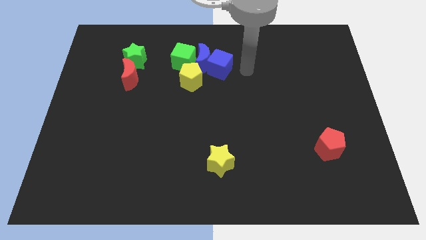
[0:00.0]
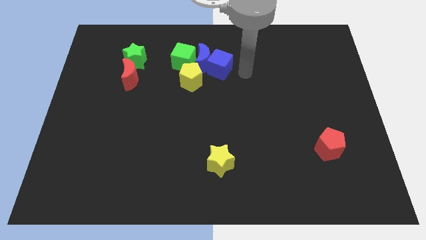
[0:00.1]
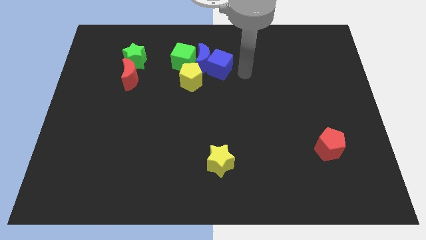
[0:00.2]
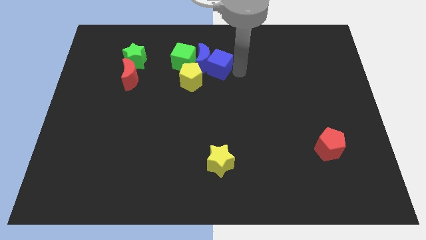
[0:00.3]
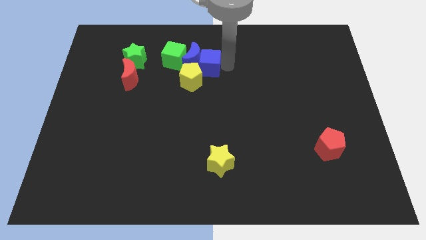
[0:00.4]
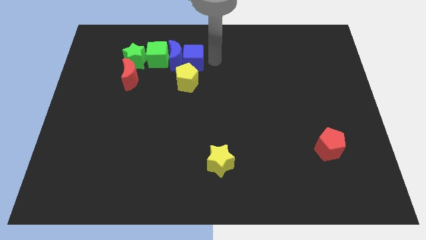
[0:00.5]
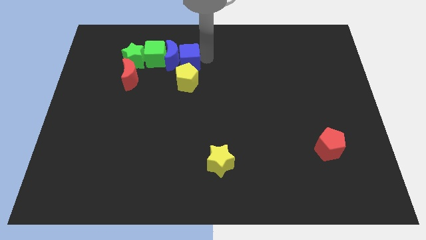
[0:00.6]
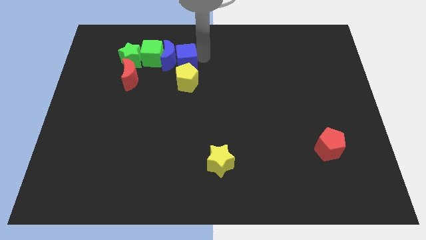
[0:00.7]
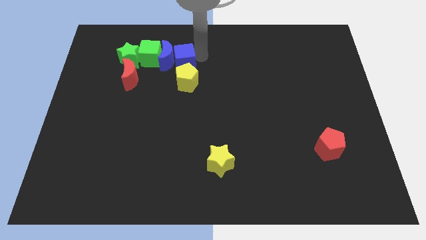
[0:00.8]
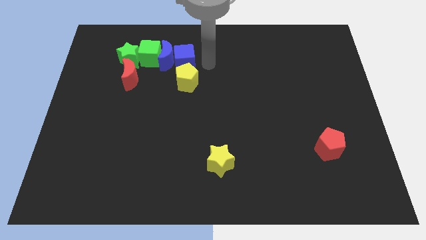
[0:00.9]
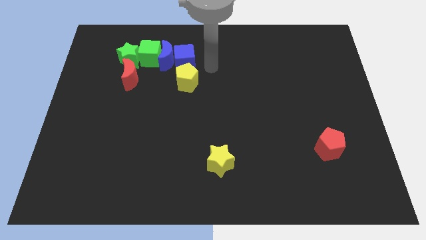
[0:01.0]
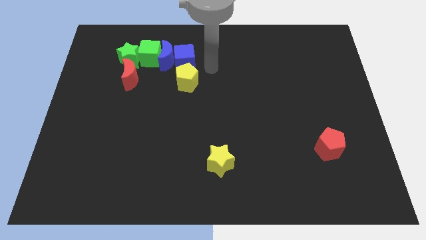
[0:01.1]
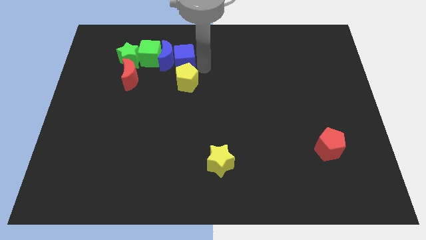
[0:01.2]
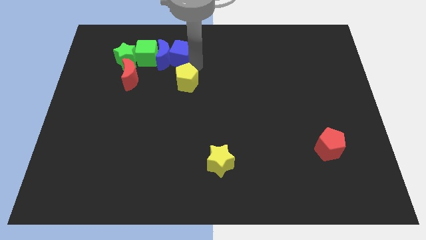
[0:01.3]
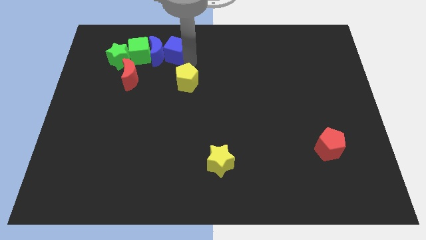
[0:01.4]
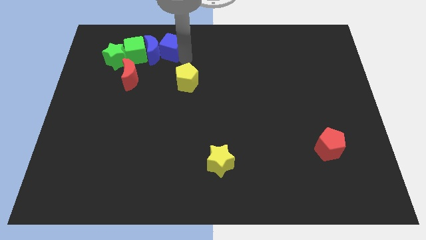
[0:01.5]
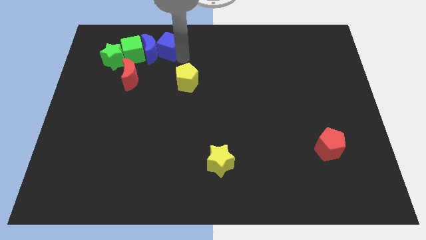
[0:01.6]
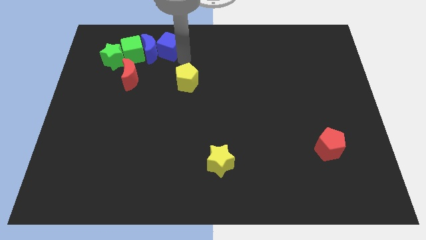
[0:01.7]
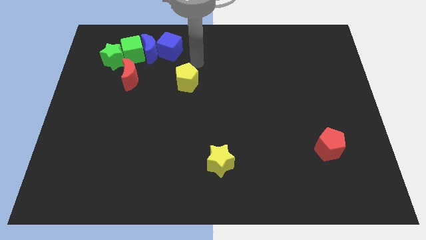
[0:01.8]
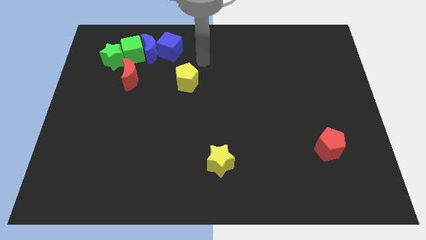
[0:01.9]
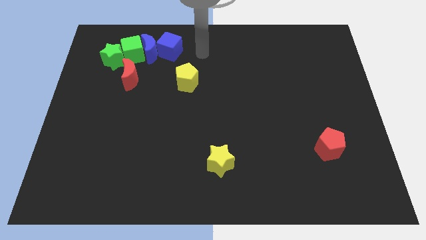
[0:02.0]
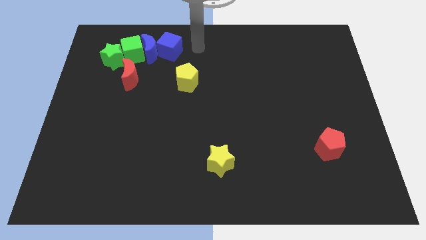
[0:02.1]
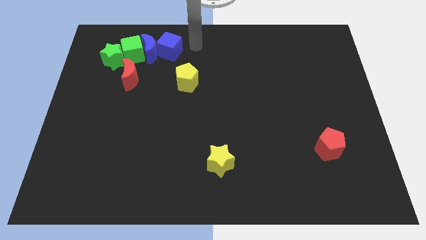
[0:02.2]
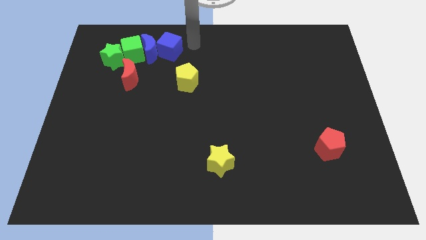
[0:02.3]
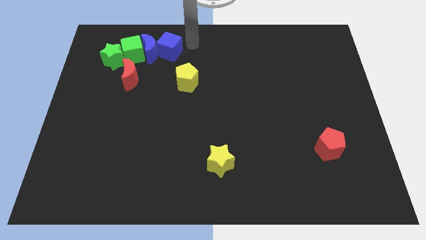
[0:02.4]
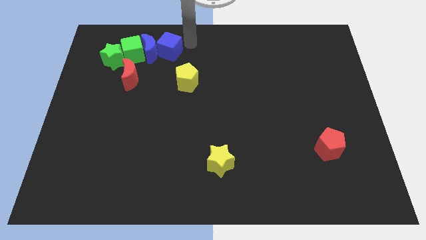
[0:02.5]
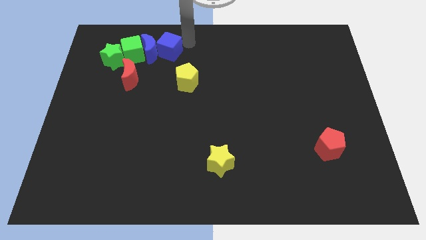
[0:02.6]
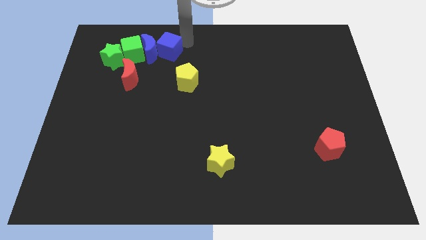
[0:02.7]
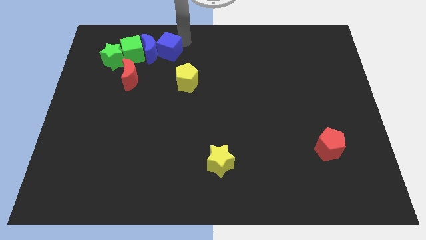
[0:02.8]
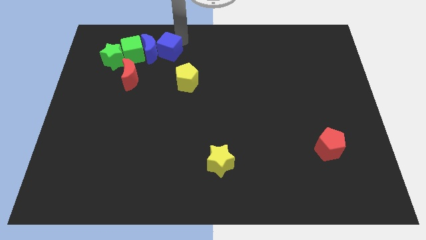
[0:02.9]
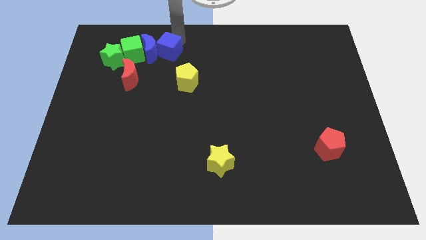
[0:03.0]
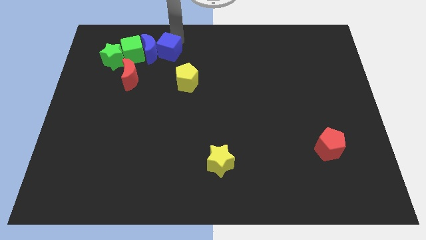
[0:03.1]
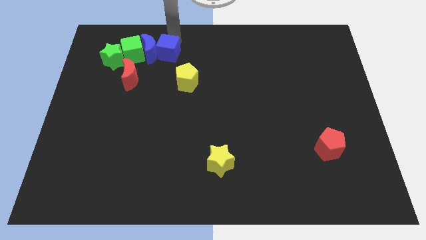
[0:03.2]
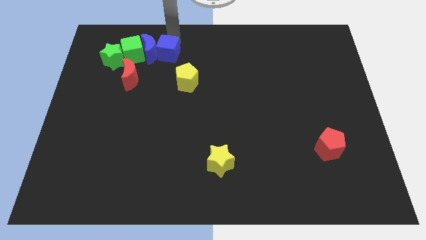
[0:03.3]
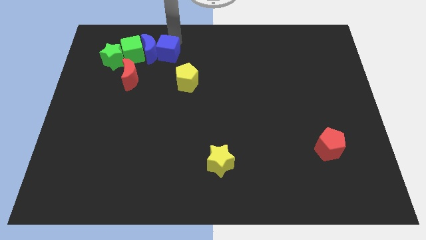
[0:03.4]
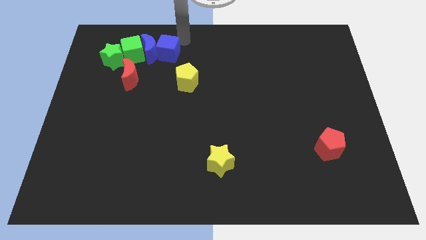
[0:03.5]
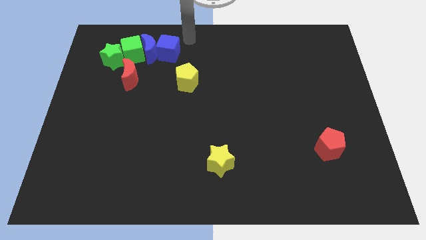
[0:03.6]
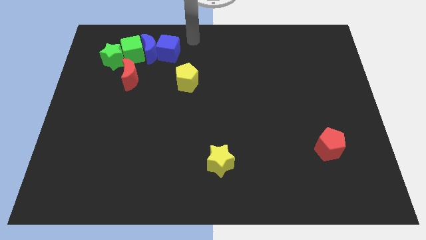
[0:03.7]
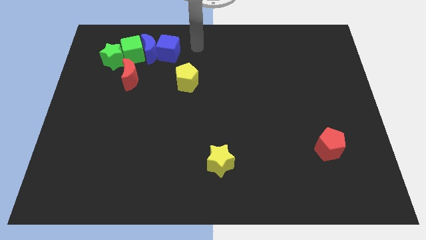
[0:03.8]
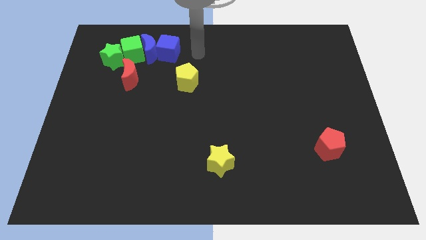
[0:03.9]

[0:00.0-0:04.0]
push the blue and green blocks to the left side

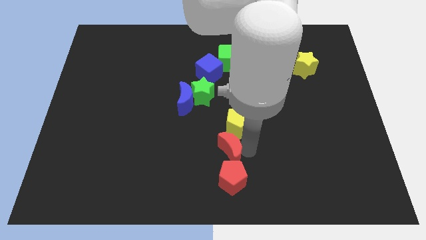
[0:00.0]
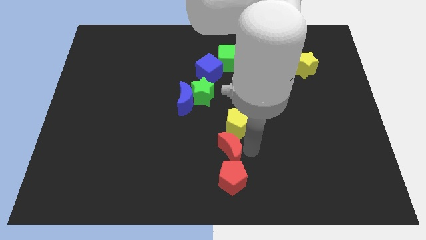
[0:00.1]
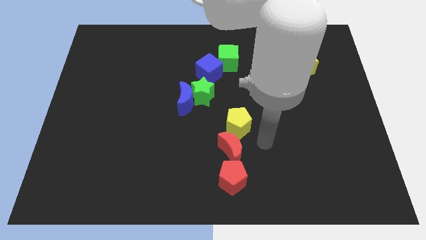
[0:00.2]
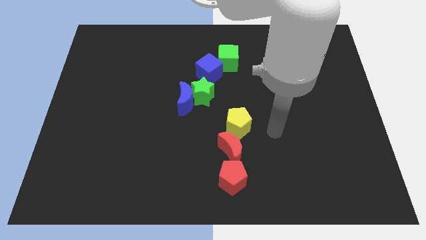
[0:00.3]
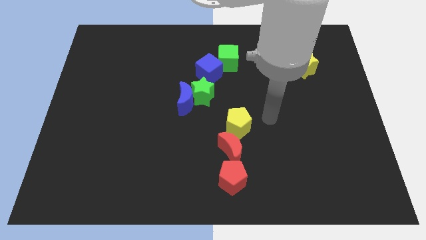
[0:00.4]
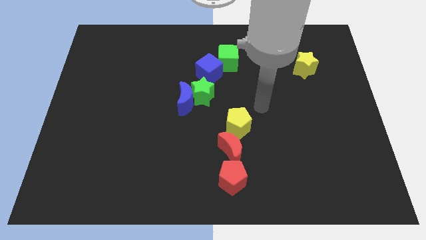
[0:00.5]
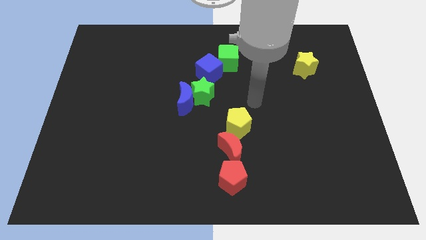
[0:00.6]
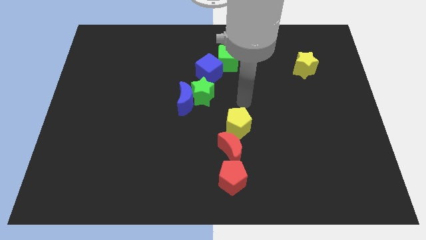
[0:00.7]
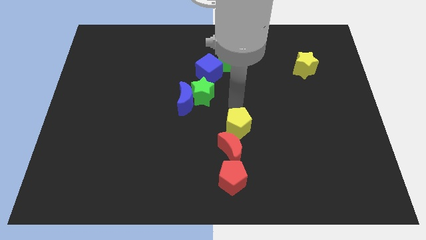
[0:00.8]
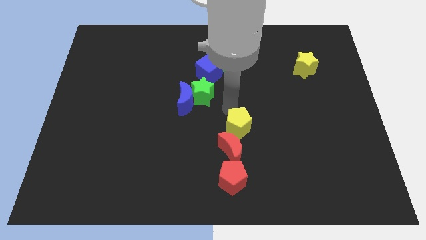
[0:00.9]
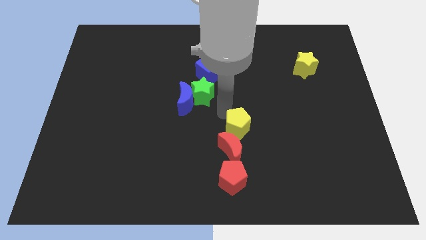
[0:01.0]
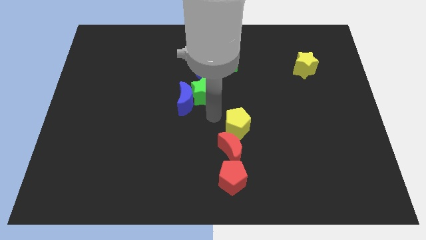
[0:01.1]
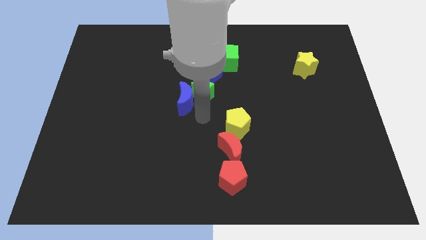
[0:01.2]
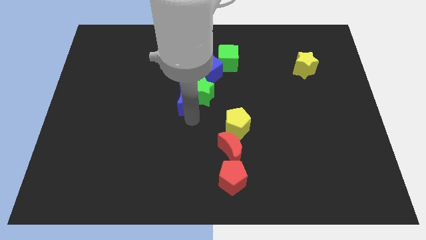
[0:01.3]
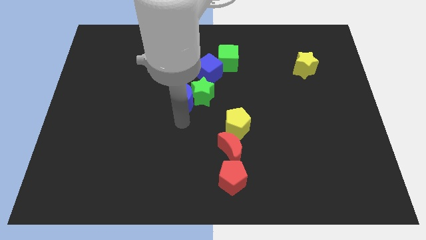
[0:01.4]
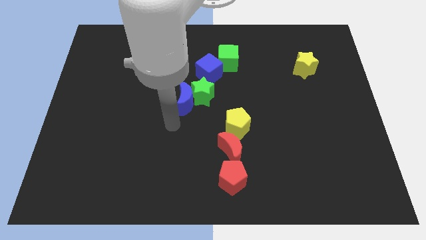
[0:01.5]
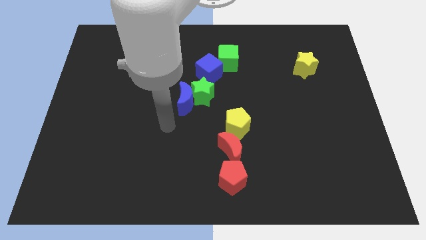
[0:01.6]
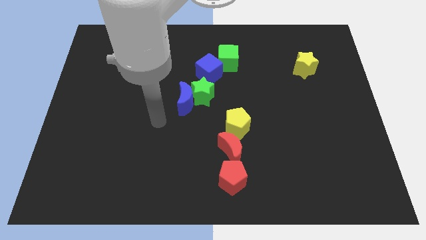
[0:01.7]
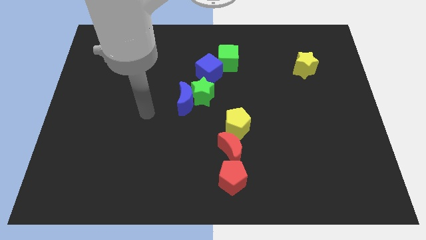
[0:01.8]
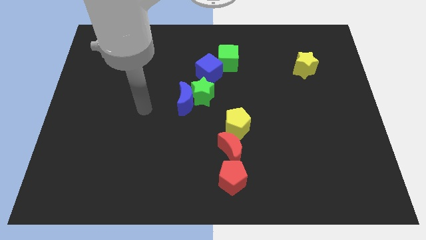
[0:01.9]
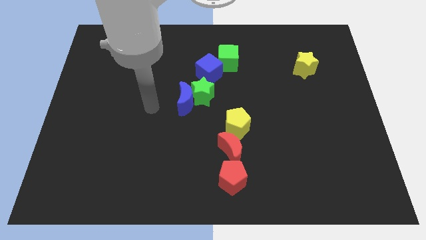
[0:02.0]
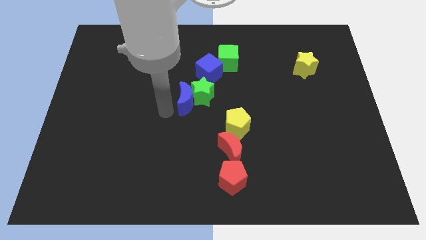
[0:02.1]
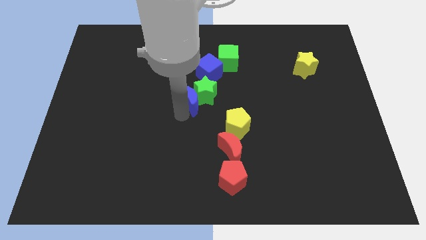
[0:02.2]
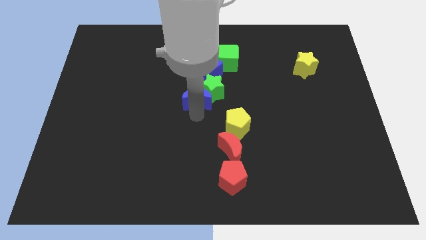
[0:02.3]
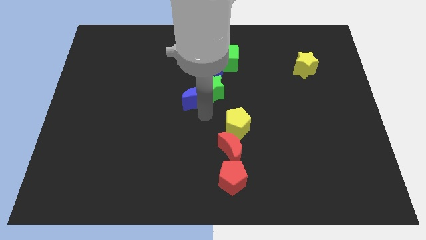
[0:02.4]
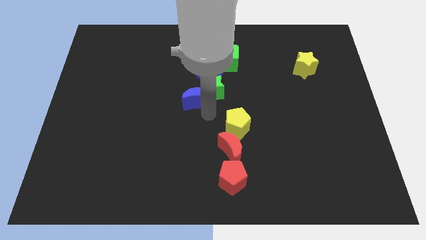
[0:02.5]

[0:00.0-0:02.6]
move the blue crescent slightly to the right

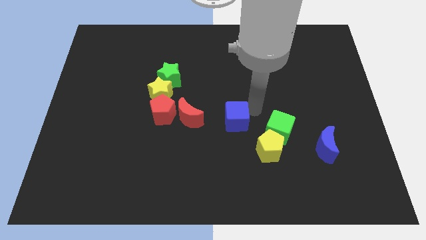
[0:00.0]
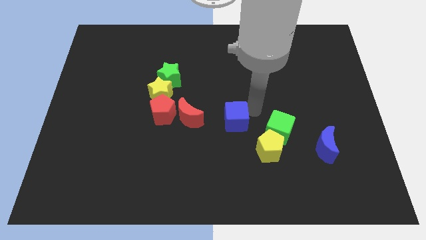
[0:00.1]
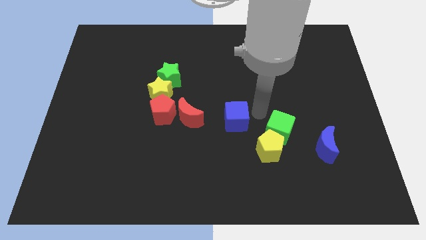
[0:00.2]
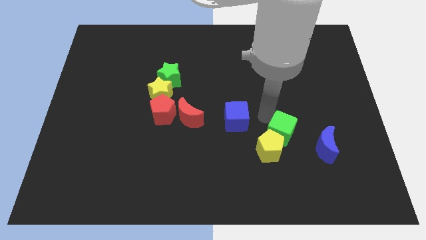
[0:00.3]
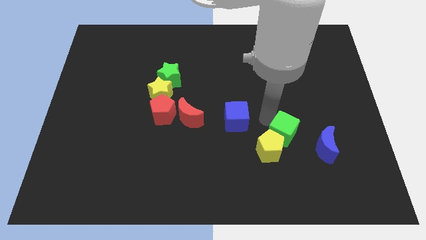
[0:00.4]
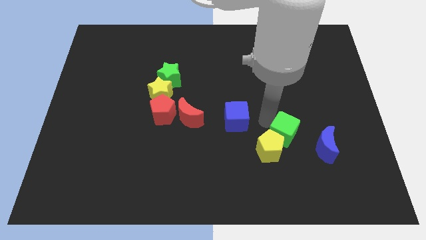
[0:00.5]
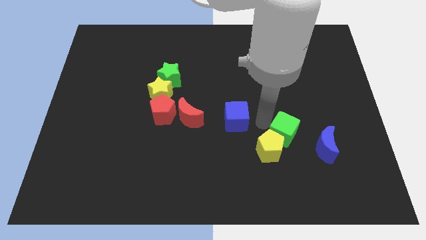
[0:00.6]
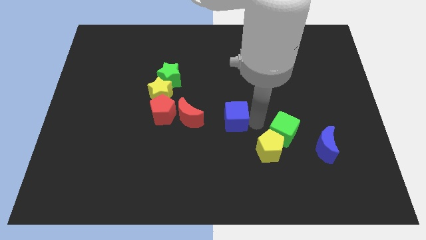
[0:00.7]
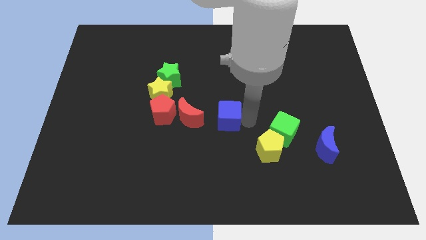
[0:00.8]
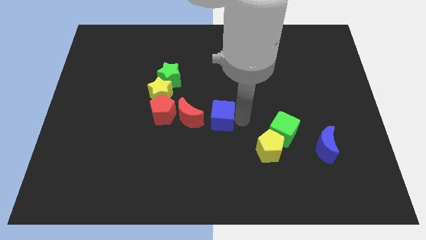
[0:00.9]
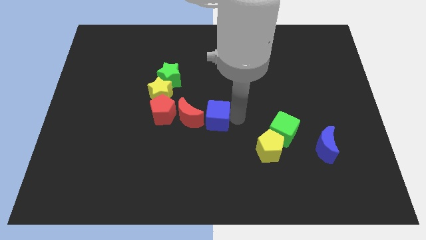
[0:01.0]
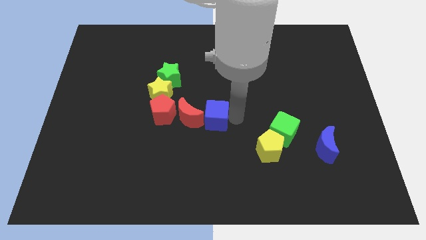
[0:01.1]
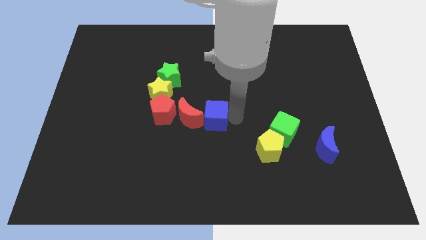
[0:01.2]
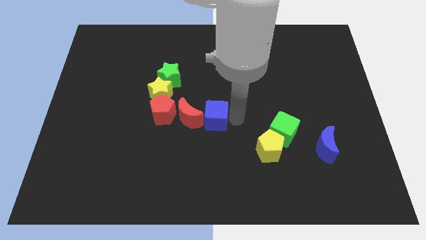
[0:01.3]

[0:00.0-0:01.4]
drag the blue cube into red crescent

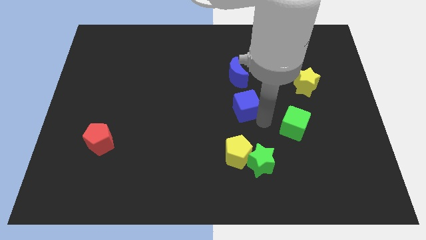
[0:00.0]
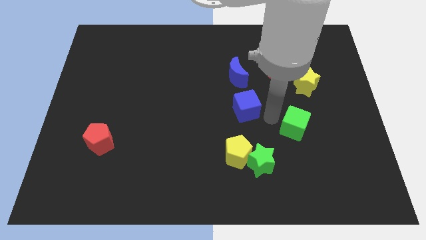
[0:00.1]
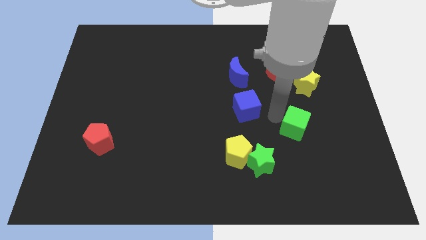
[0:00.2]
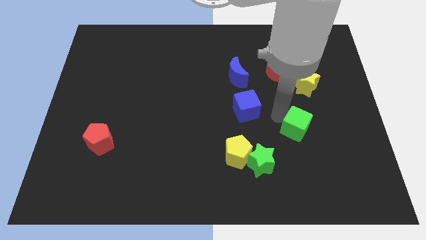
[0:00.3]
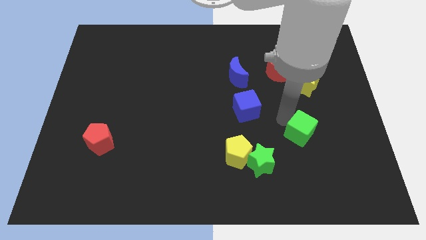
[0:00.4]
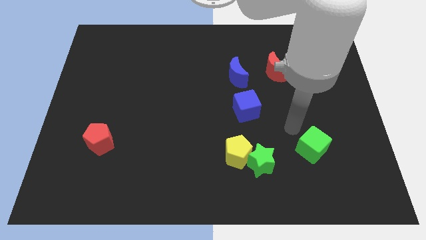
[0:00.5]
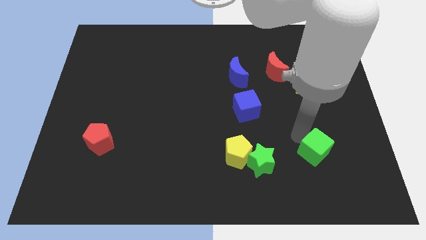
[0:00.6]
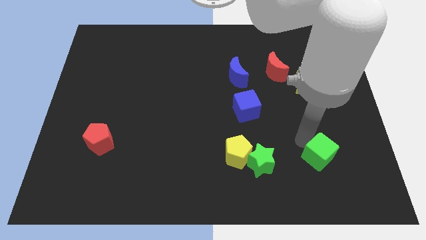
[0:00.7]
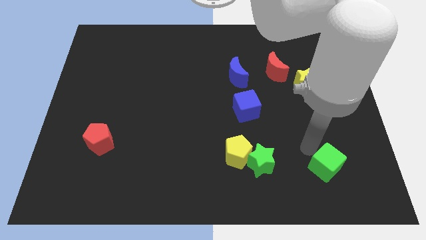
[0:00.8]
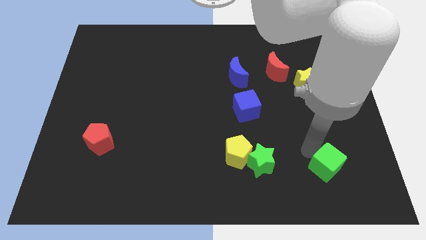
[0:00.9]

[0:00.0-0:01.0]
push the green cube towards the bottom side of the board
